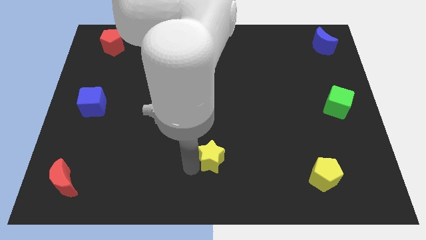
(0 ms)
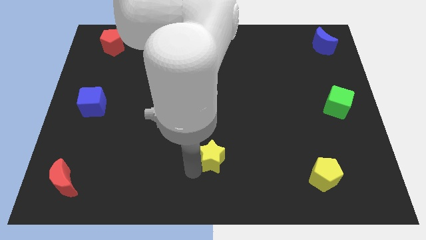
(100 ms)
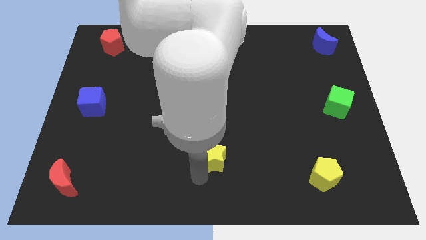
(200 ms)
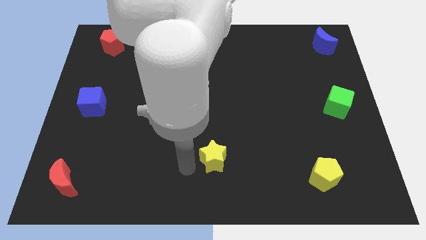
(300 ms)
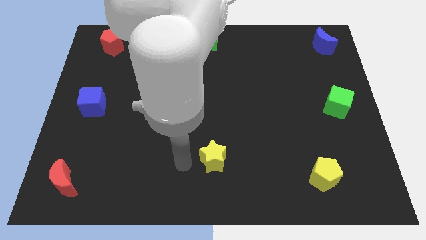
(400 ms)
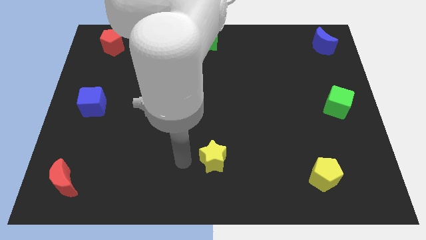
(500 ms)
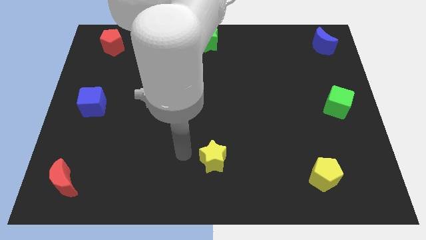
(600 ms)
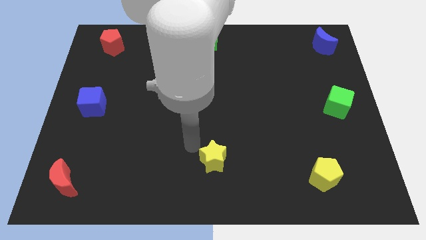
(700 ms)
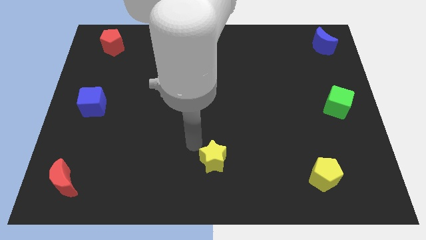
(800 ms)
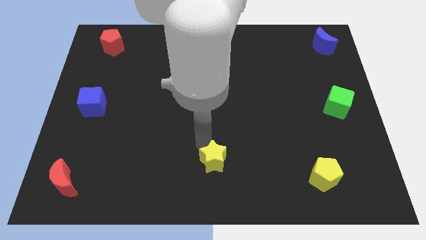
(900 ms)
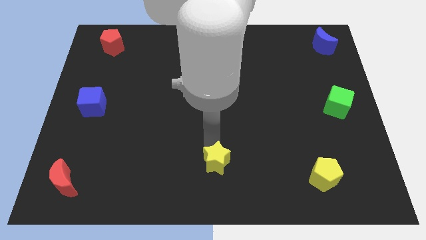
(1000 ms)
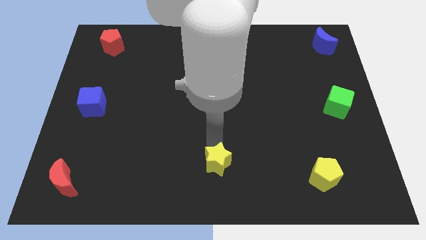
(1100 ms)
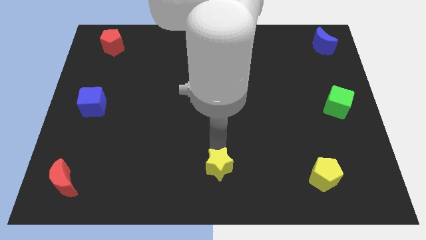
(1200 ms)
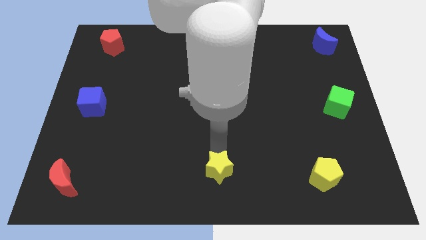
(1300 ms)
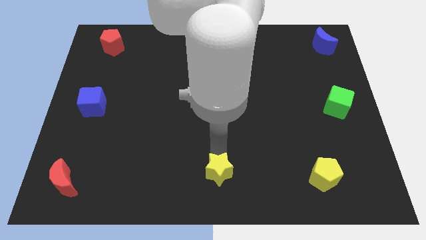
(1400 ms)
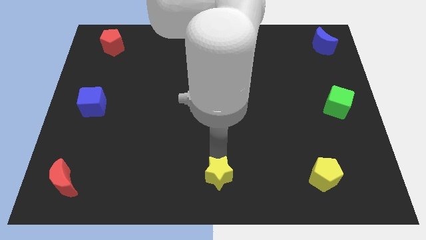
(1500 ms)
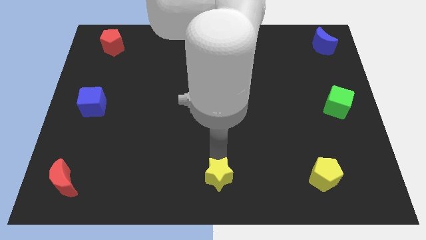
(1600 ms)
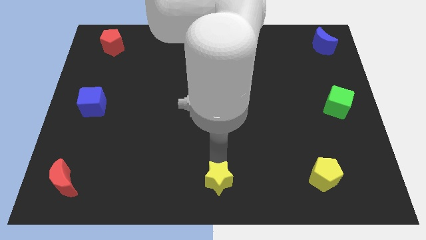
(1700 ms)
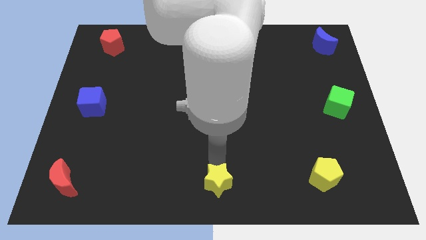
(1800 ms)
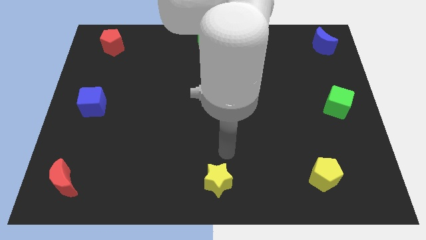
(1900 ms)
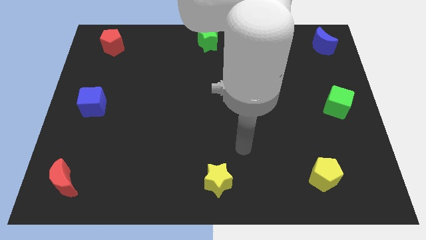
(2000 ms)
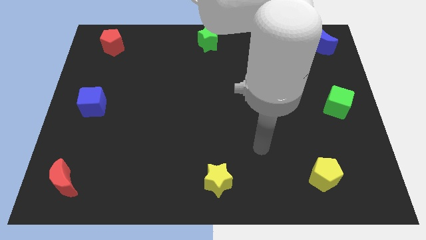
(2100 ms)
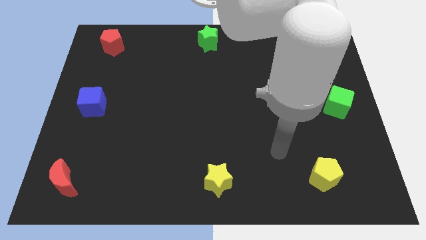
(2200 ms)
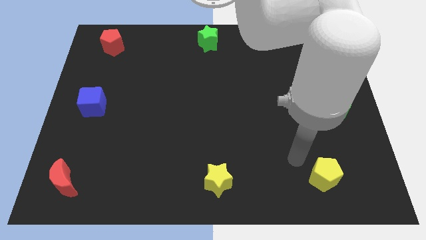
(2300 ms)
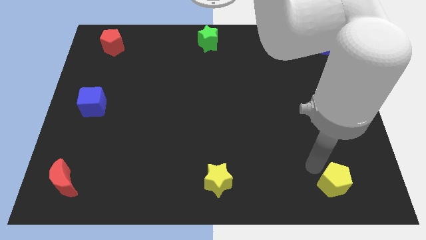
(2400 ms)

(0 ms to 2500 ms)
move the yellow star to the bottom center of the board

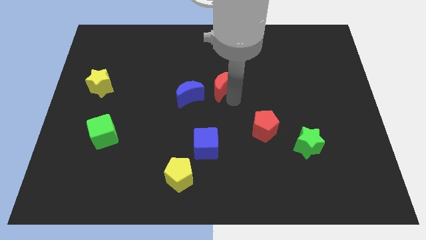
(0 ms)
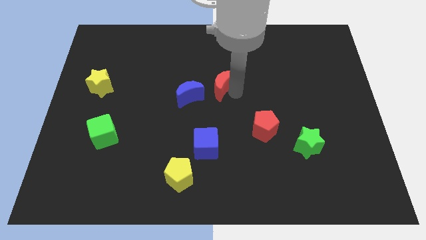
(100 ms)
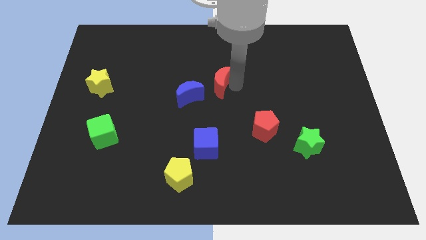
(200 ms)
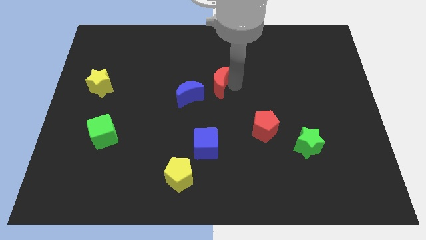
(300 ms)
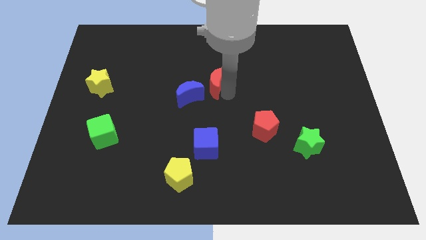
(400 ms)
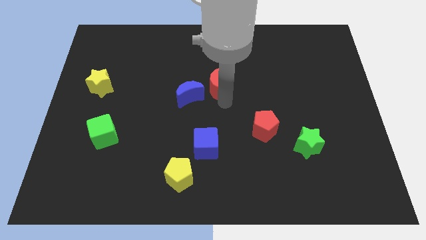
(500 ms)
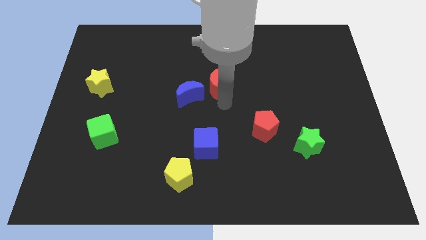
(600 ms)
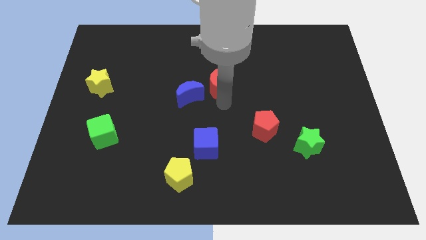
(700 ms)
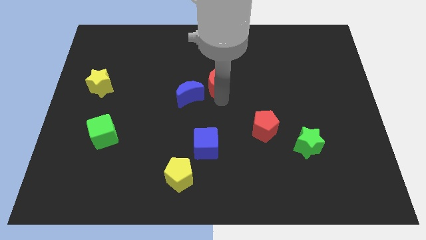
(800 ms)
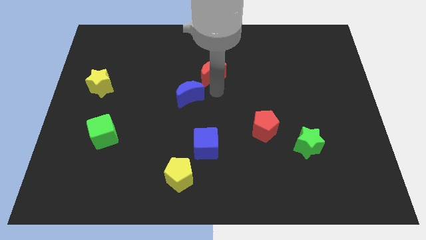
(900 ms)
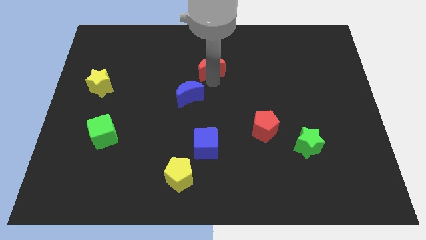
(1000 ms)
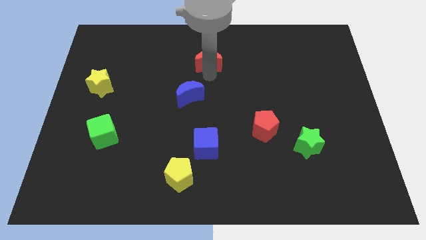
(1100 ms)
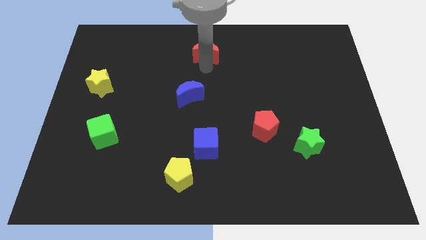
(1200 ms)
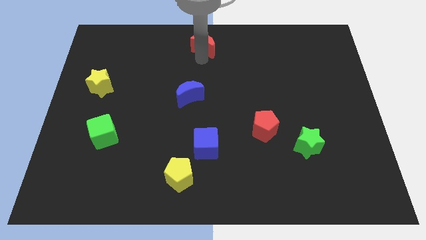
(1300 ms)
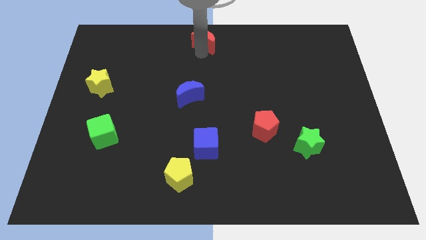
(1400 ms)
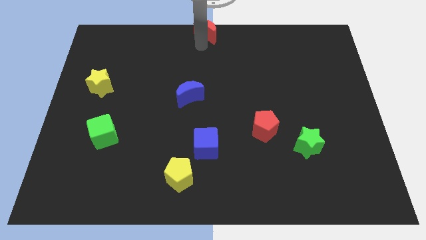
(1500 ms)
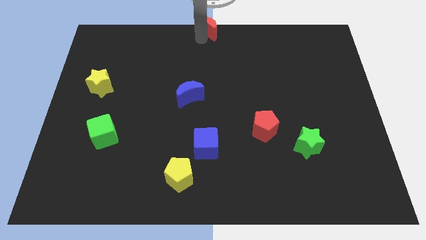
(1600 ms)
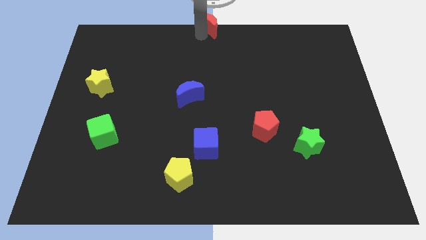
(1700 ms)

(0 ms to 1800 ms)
move the red crescent to the top center of the board

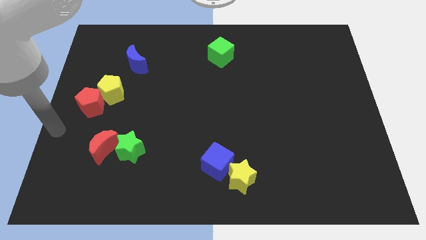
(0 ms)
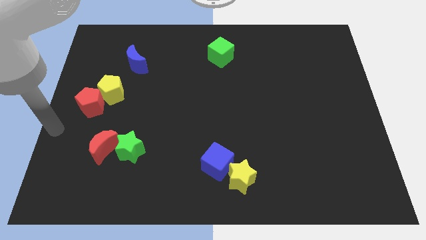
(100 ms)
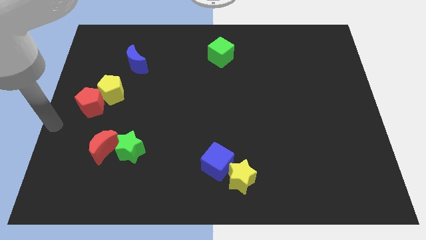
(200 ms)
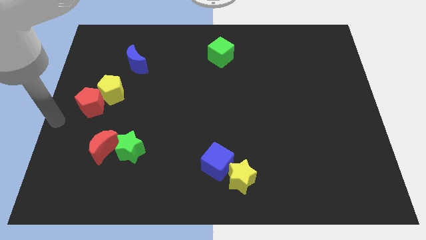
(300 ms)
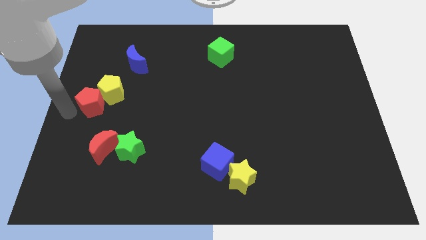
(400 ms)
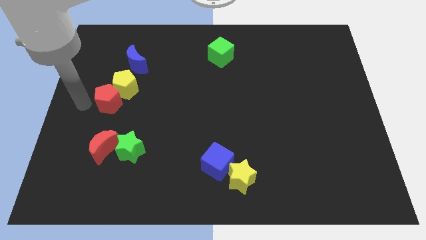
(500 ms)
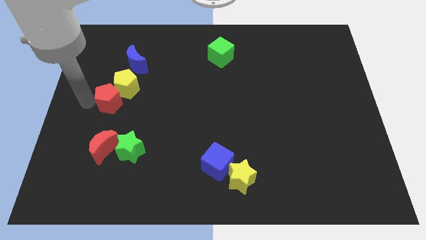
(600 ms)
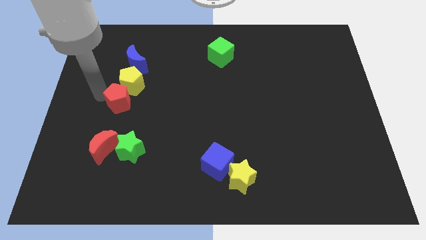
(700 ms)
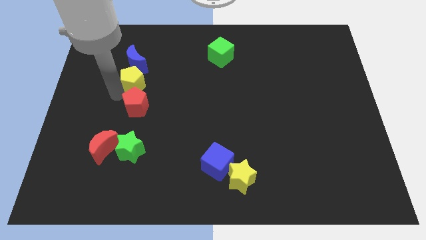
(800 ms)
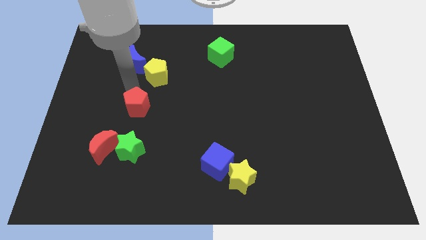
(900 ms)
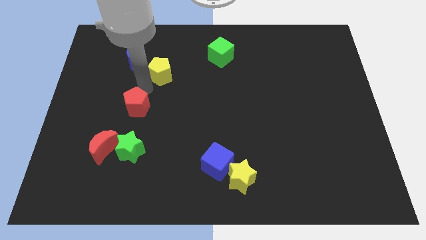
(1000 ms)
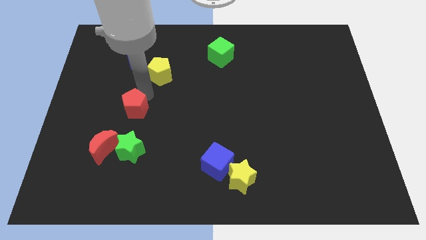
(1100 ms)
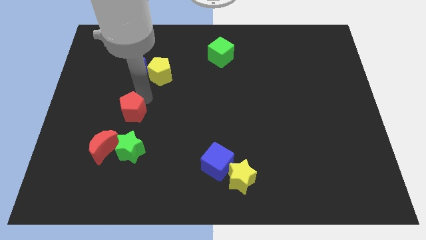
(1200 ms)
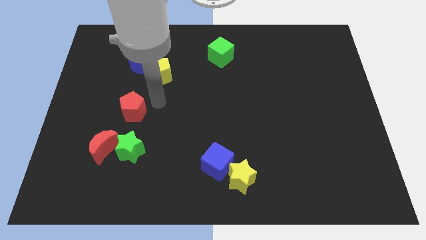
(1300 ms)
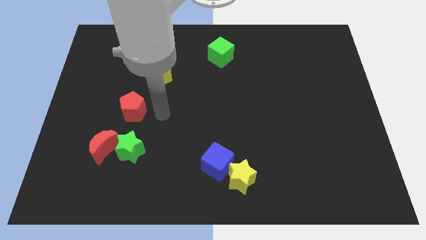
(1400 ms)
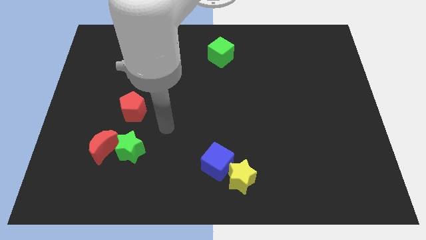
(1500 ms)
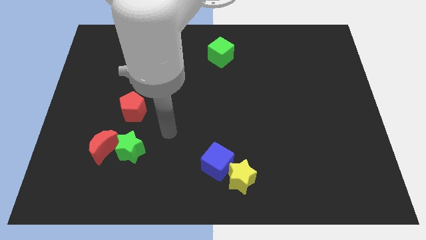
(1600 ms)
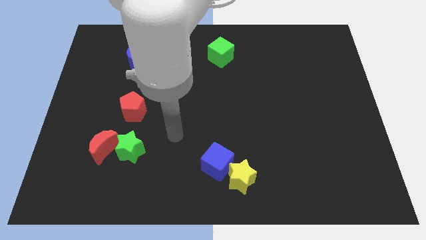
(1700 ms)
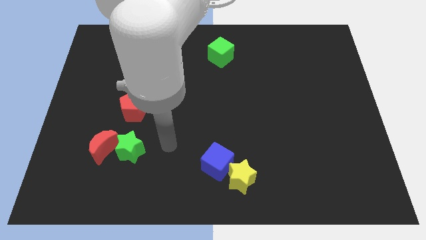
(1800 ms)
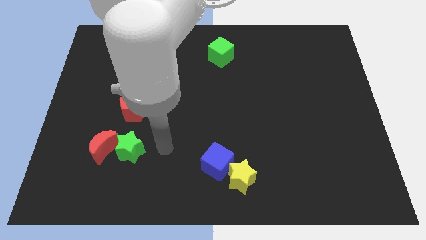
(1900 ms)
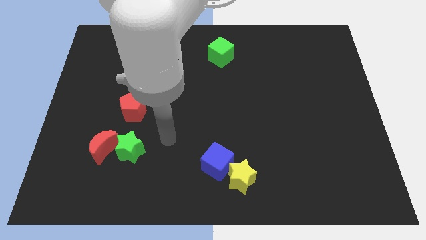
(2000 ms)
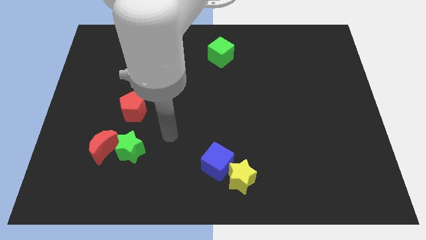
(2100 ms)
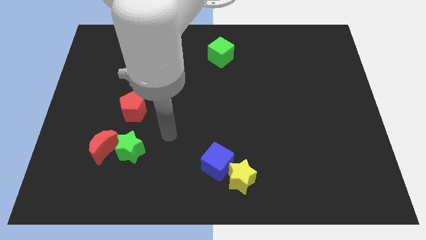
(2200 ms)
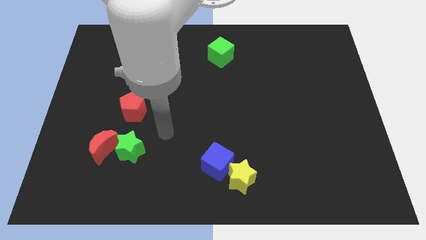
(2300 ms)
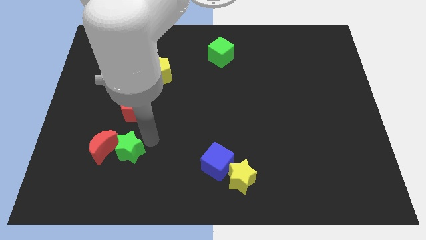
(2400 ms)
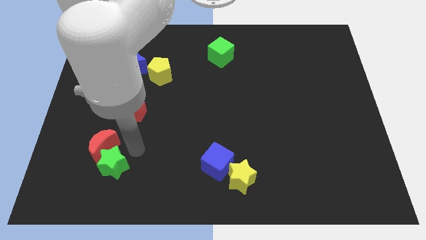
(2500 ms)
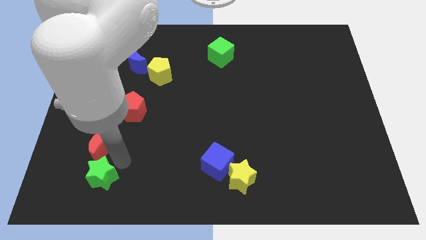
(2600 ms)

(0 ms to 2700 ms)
separate yellow pentagon and red pentagon

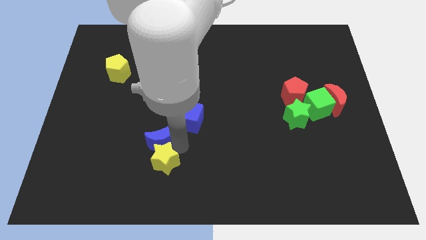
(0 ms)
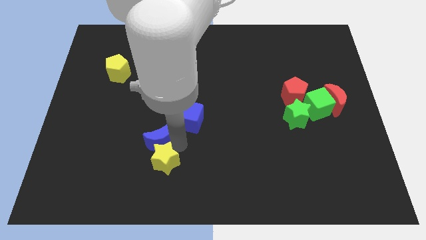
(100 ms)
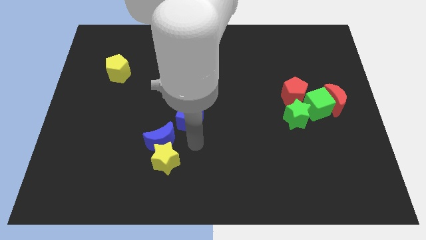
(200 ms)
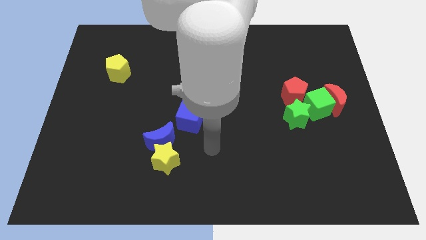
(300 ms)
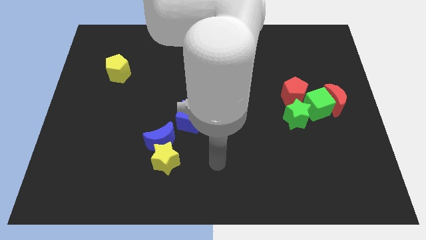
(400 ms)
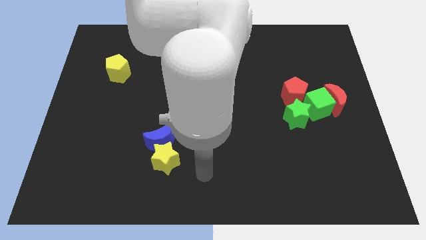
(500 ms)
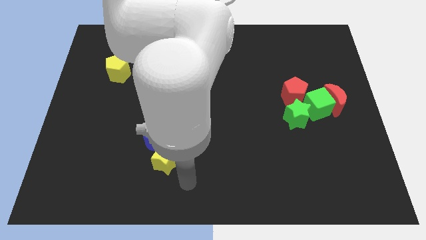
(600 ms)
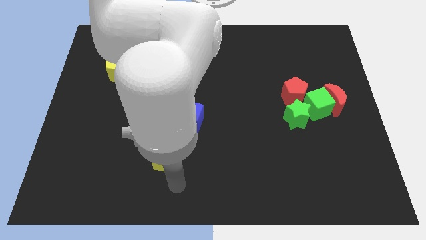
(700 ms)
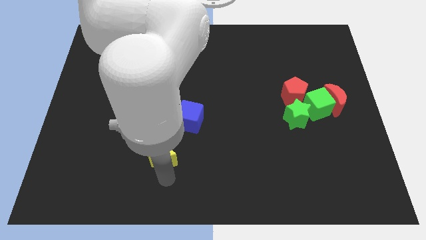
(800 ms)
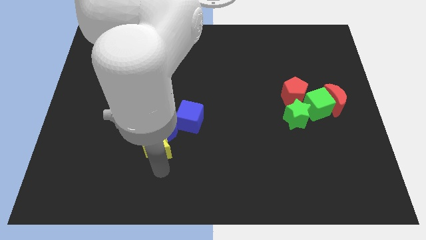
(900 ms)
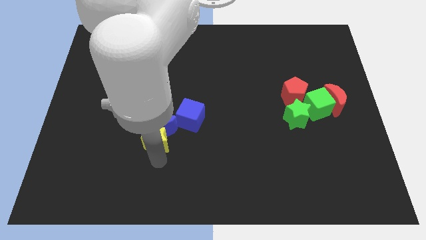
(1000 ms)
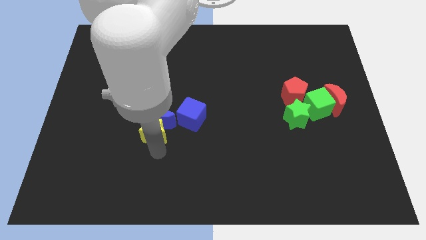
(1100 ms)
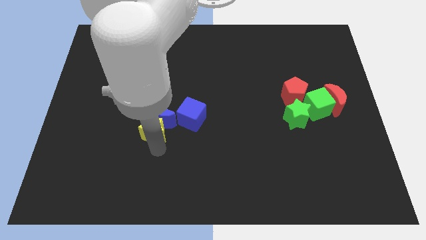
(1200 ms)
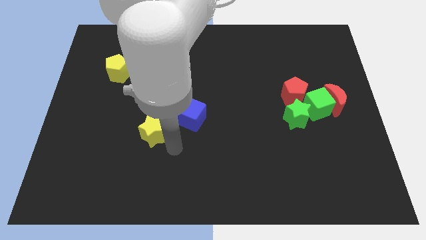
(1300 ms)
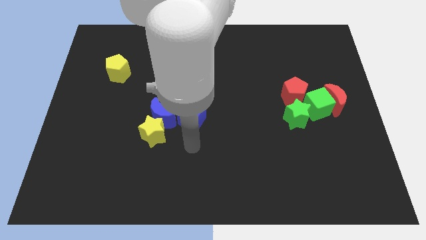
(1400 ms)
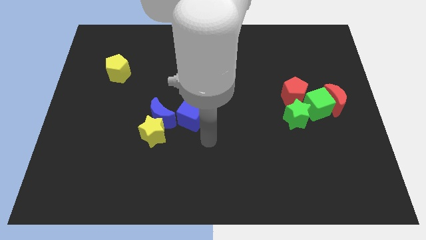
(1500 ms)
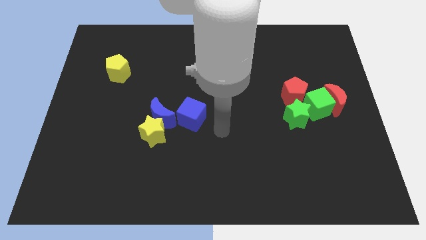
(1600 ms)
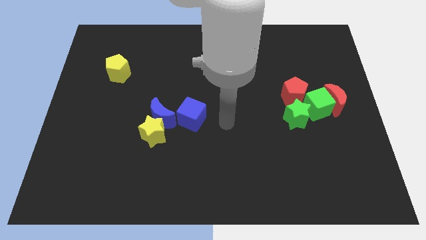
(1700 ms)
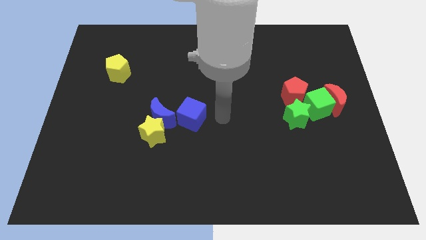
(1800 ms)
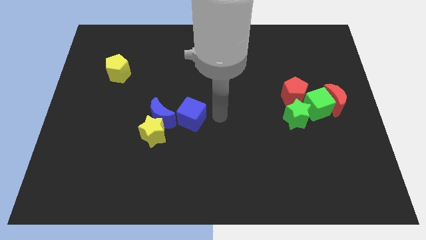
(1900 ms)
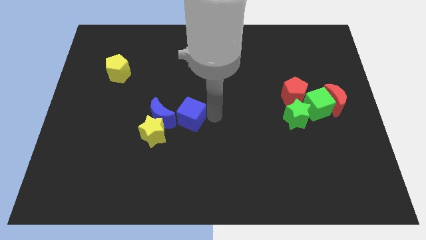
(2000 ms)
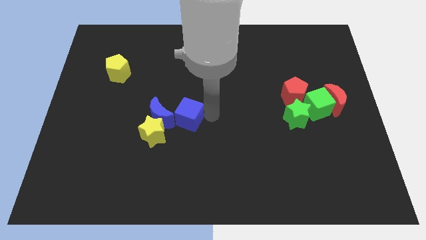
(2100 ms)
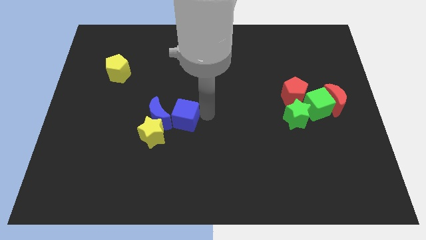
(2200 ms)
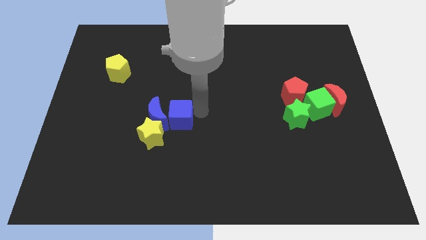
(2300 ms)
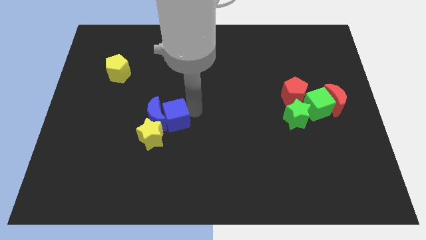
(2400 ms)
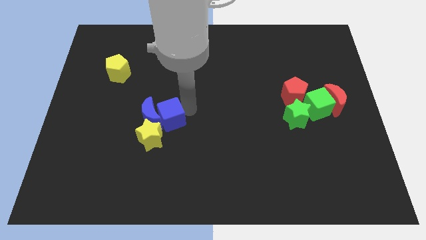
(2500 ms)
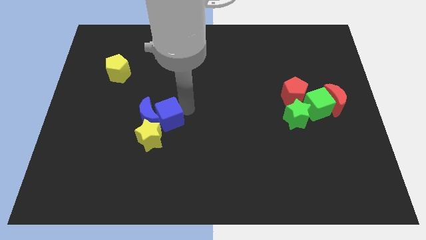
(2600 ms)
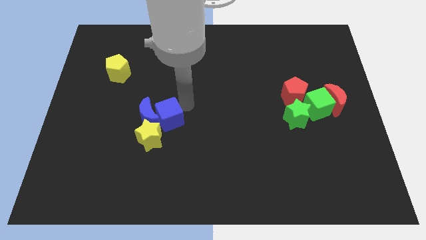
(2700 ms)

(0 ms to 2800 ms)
push the yellow star towards the upside
